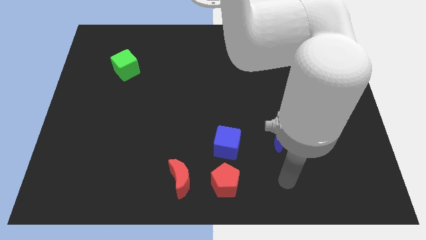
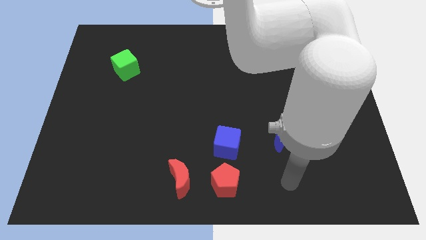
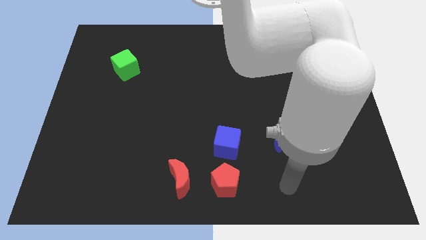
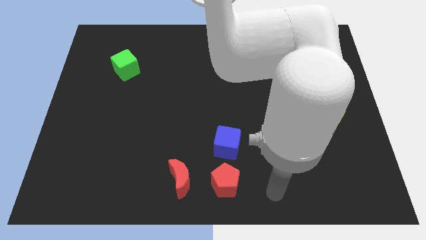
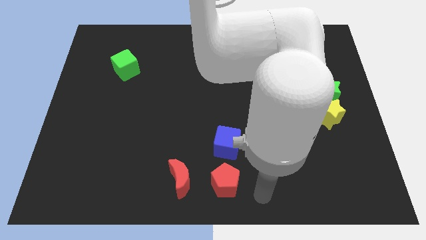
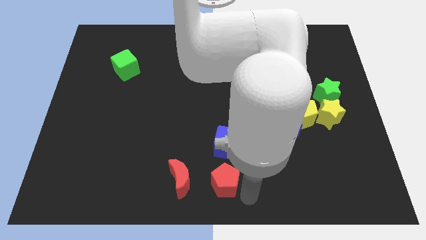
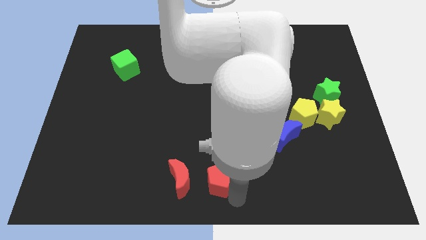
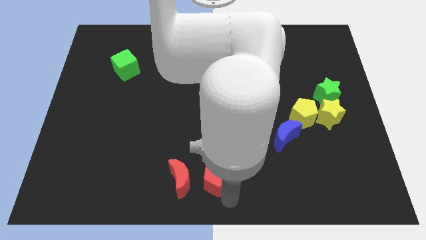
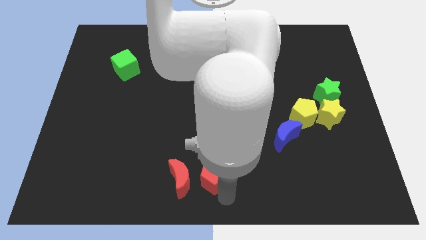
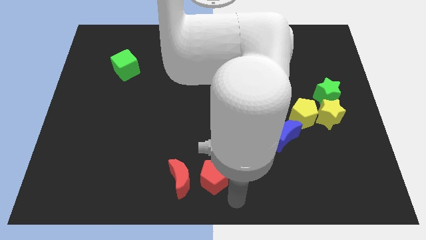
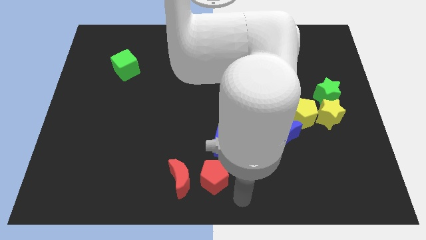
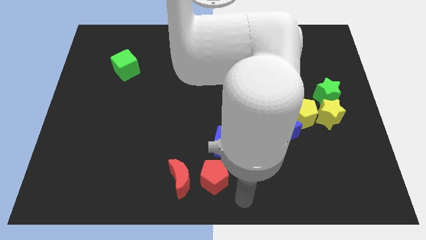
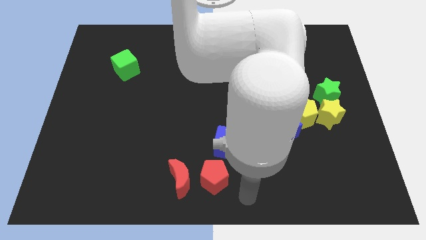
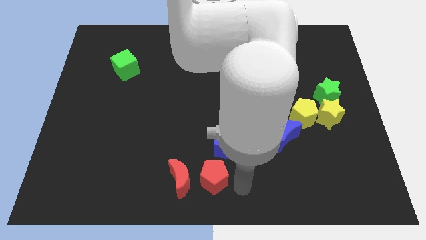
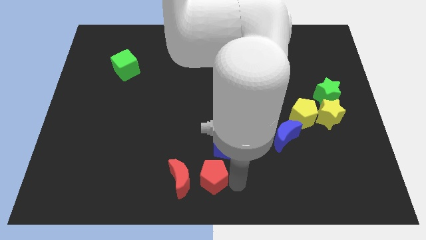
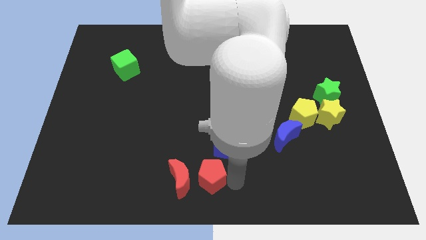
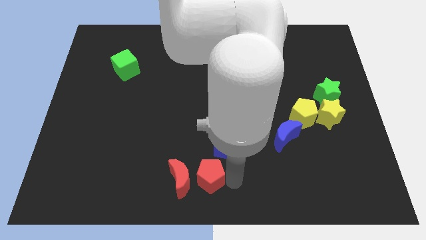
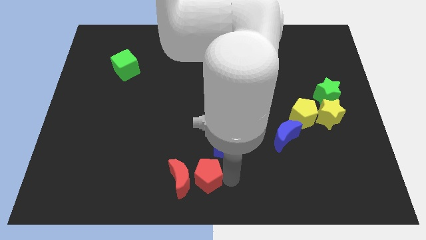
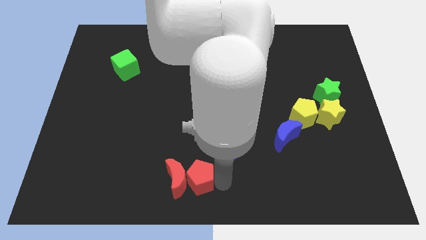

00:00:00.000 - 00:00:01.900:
push the red pentagon diagonally bottom left to the blue cube

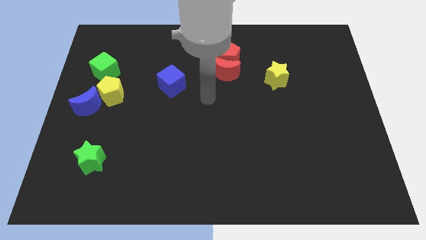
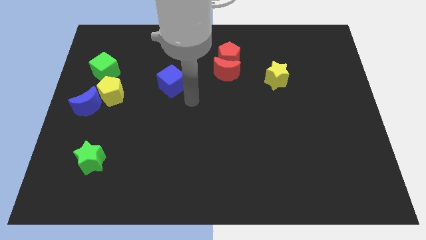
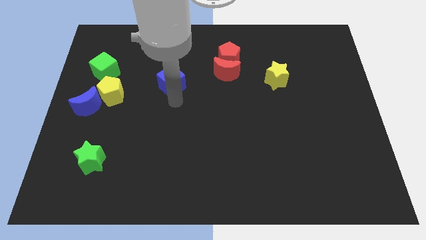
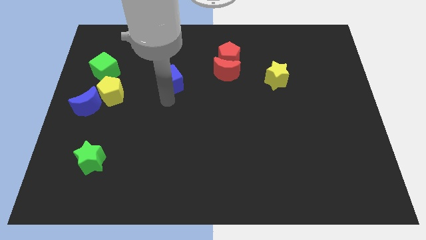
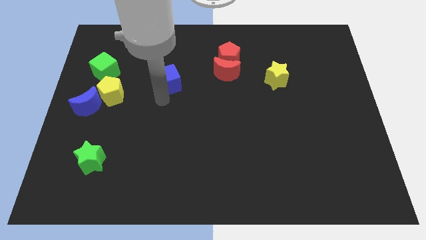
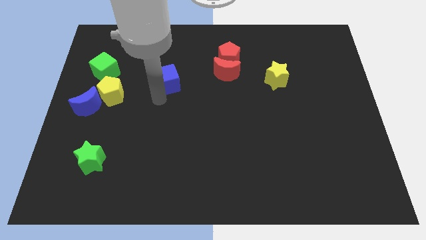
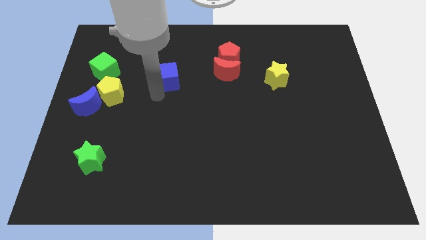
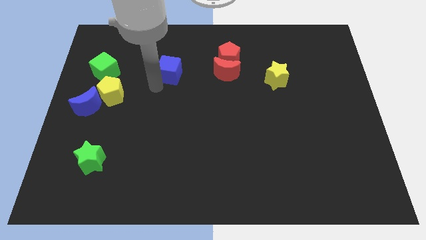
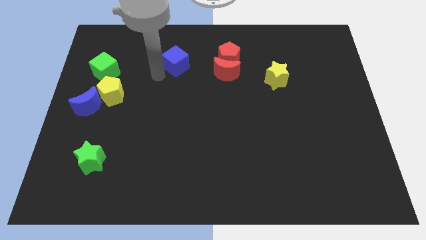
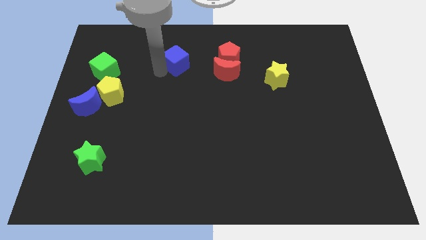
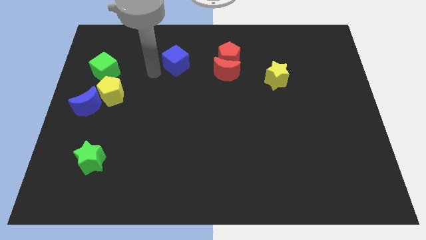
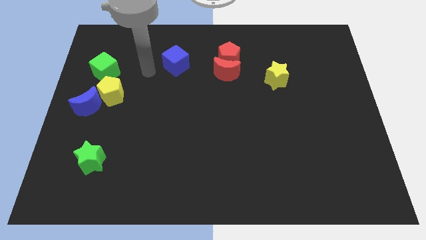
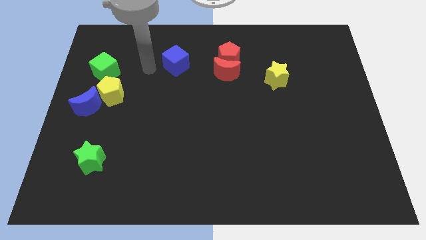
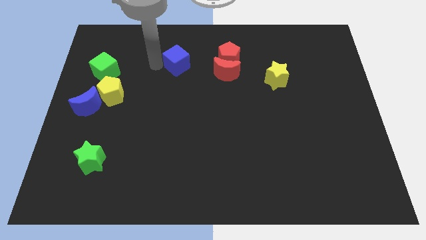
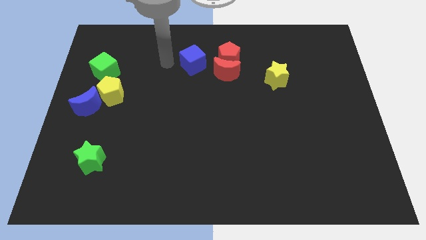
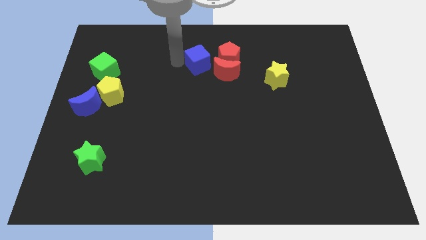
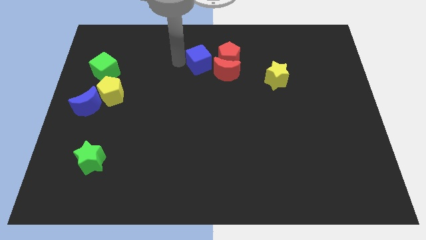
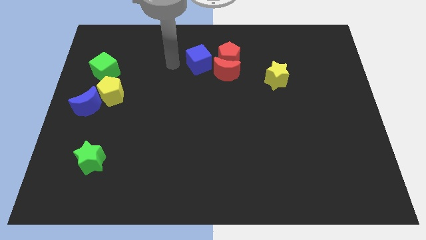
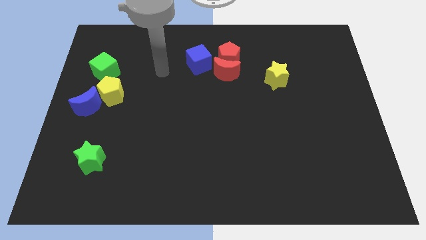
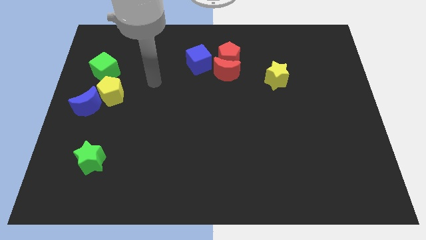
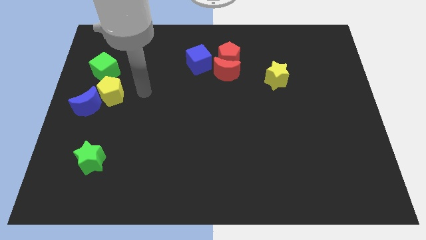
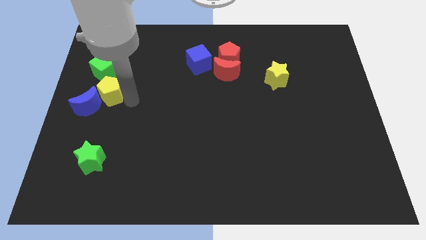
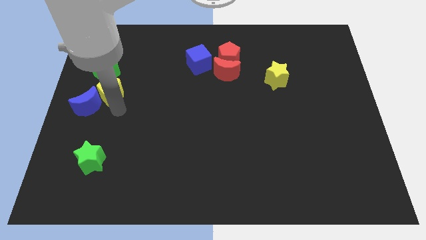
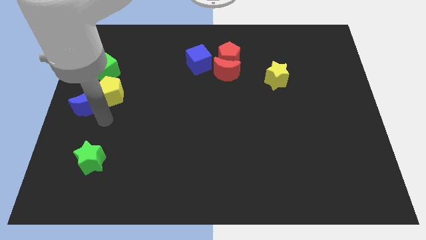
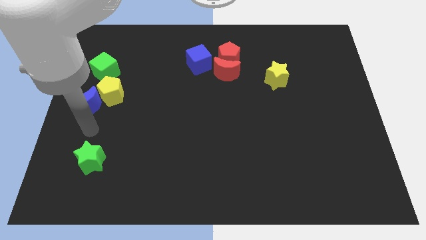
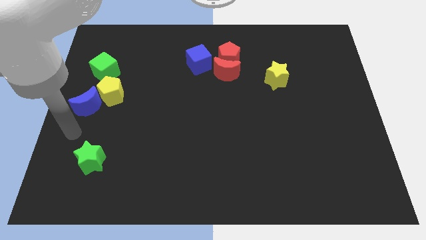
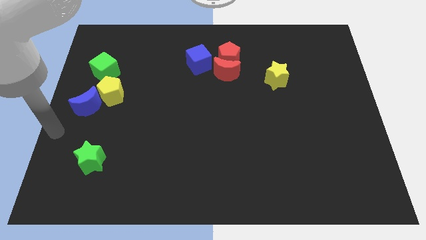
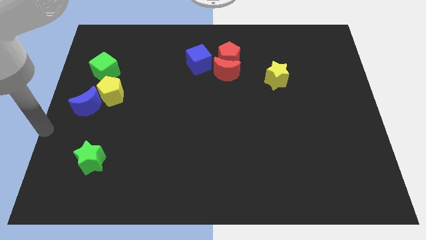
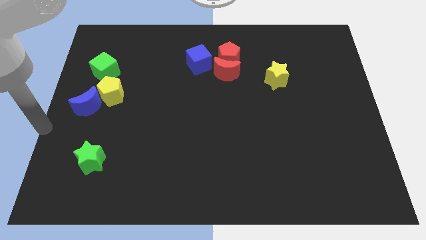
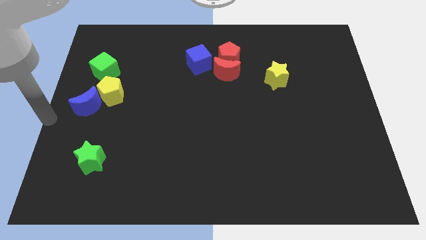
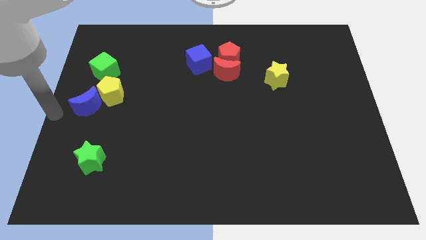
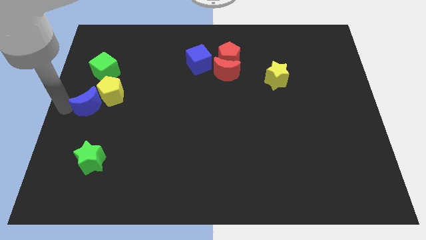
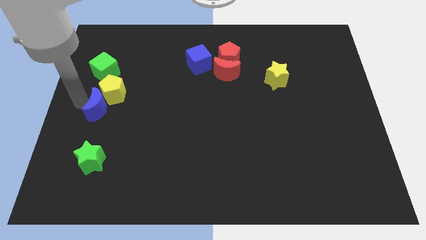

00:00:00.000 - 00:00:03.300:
push the blue cube towards the red crescent

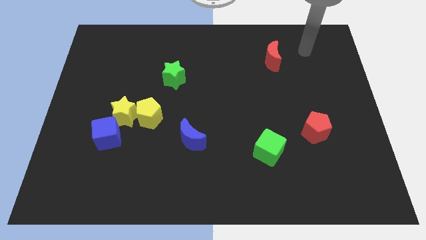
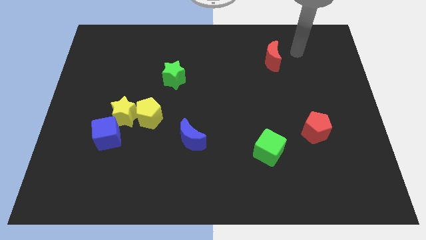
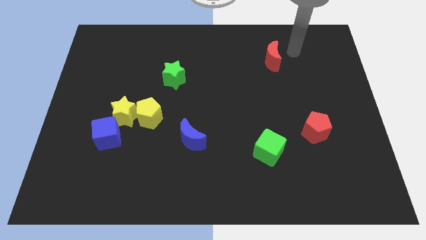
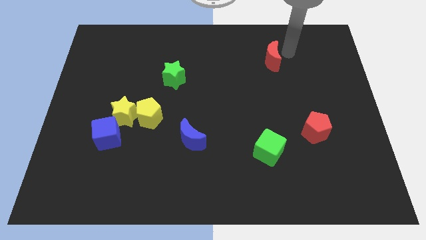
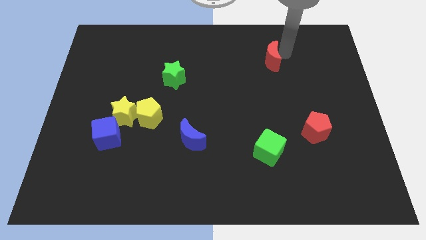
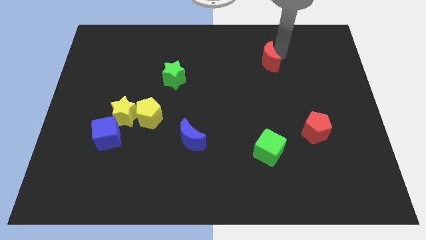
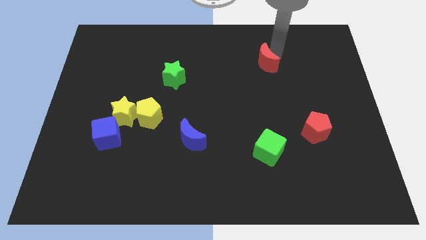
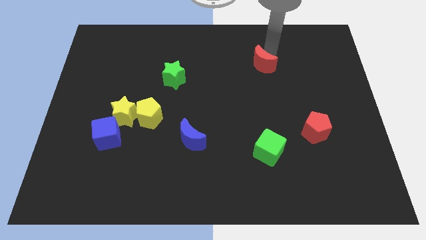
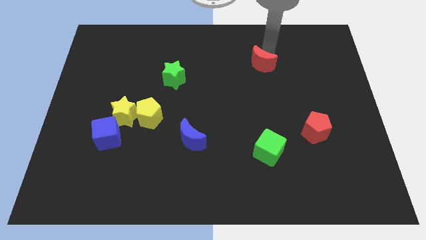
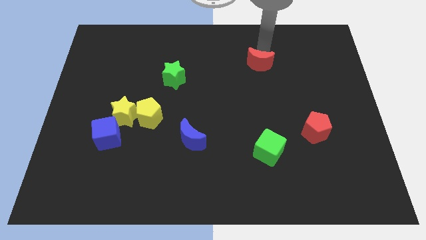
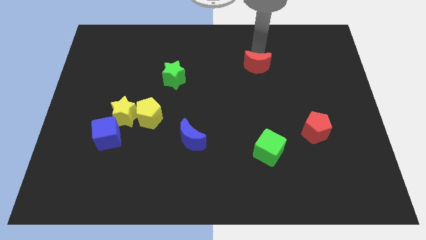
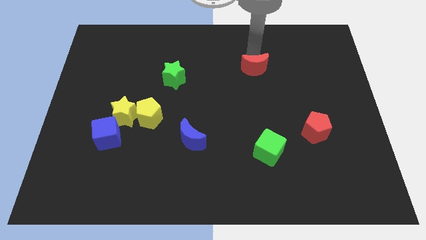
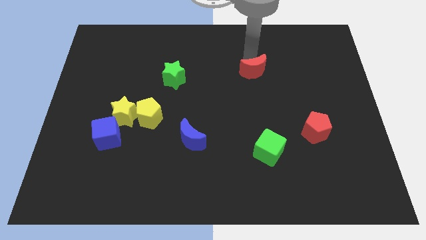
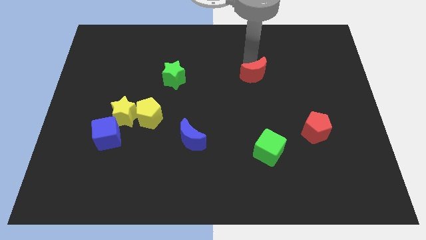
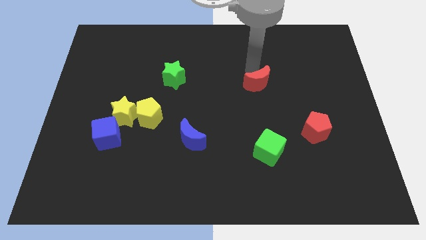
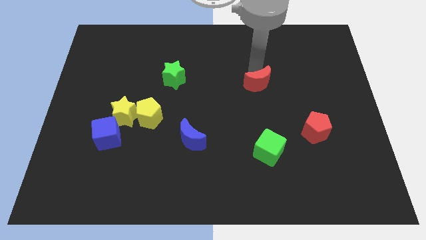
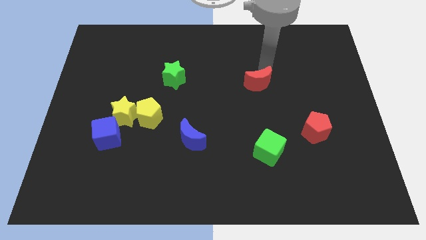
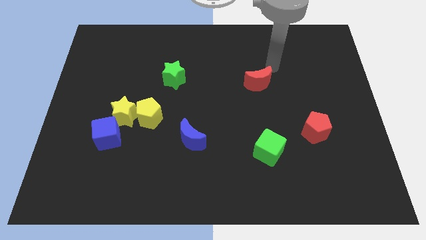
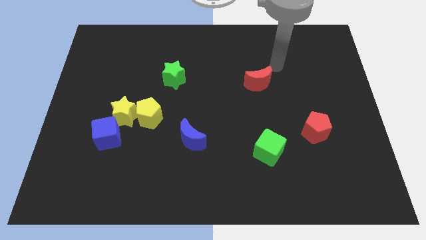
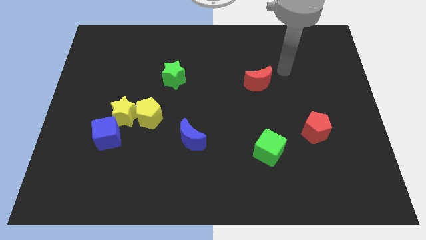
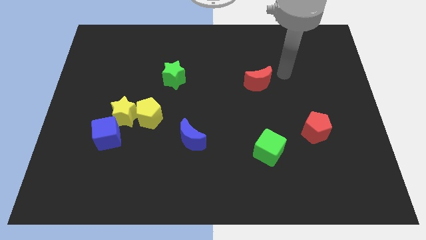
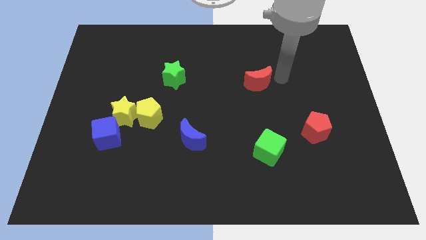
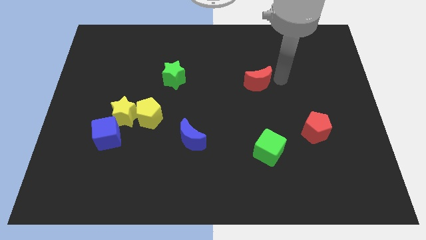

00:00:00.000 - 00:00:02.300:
place the red moon above the green cube

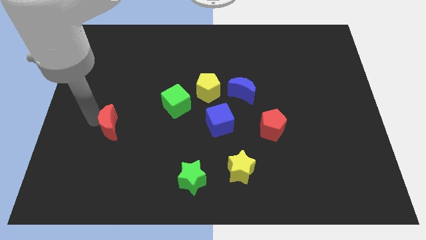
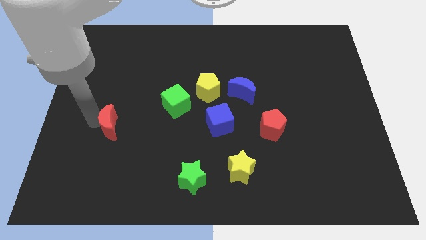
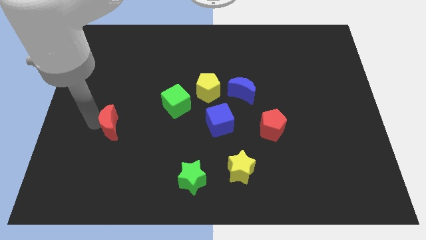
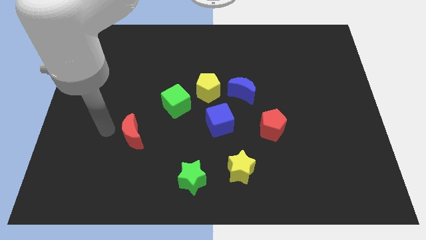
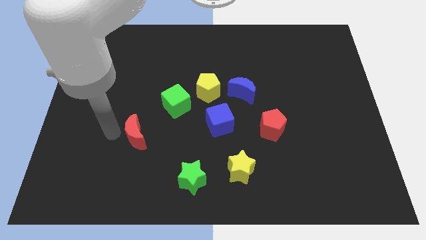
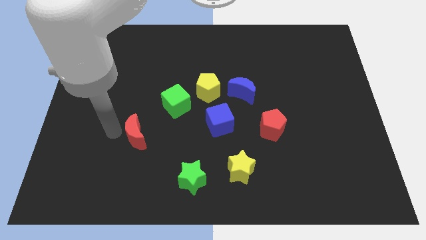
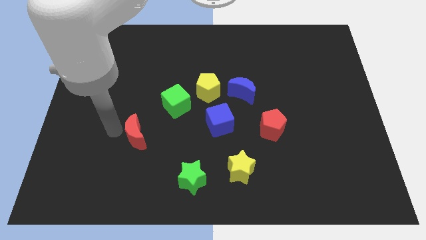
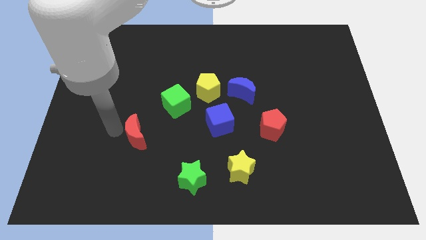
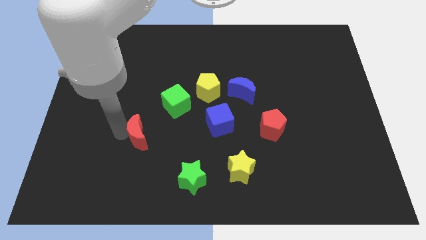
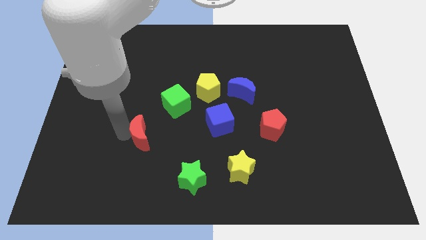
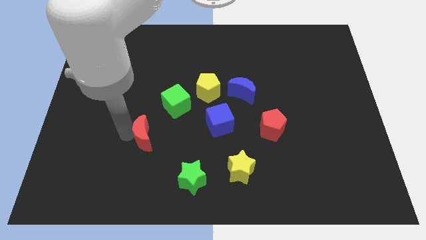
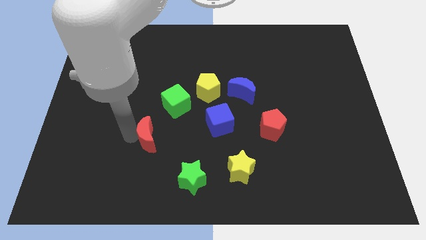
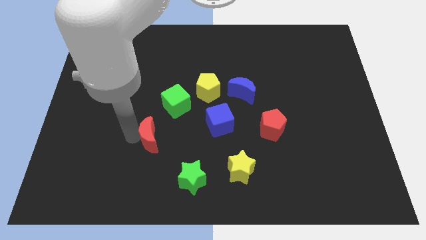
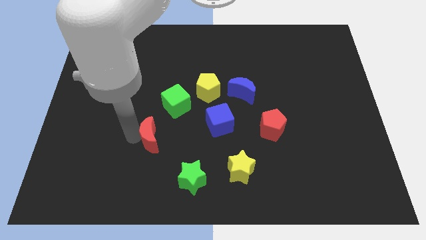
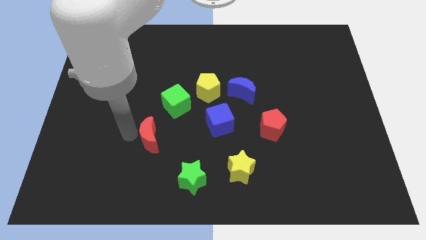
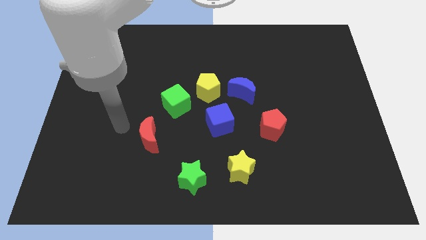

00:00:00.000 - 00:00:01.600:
move the red moon to the top left of the green star
